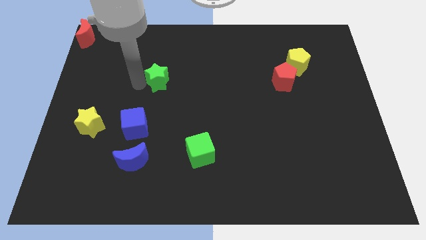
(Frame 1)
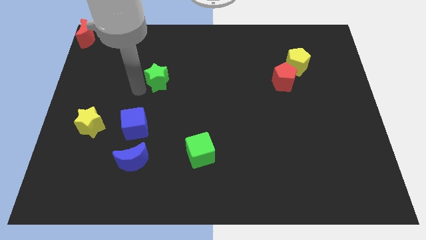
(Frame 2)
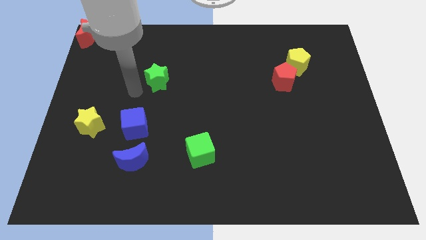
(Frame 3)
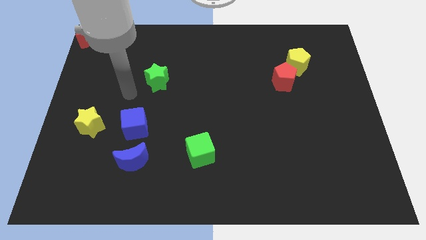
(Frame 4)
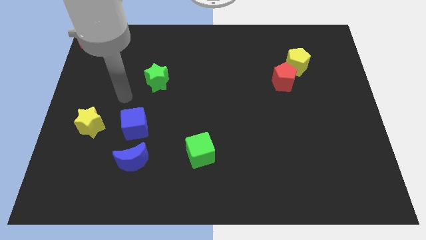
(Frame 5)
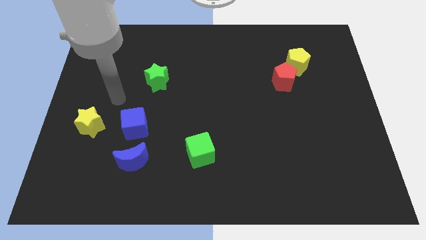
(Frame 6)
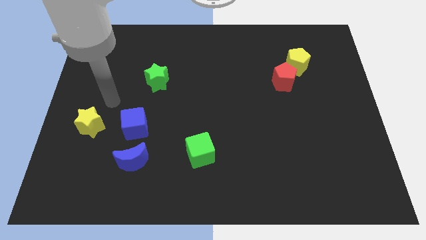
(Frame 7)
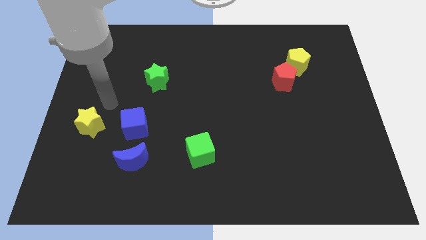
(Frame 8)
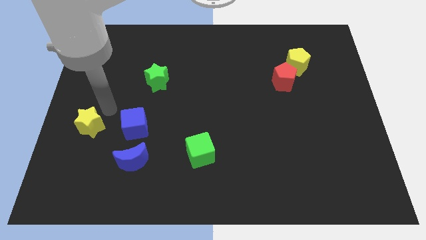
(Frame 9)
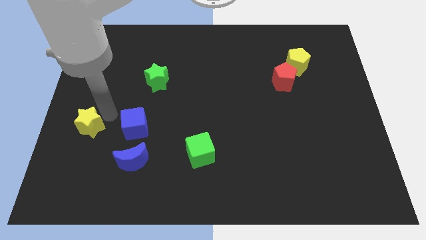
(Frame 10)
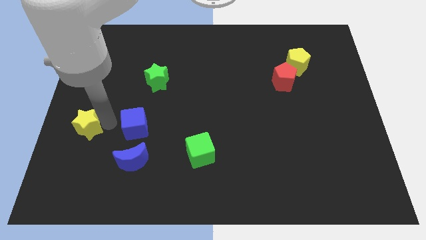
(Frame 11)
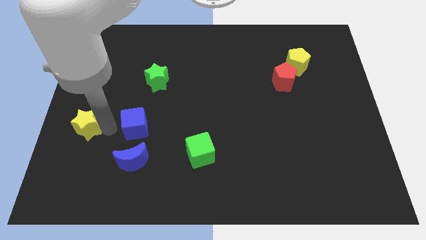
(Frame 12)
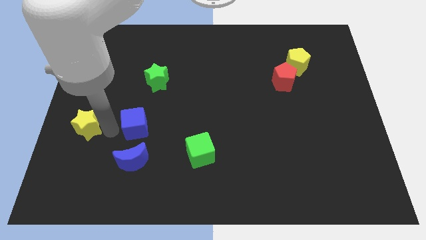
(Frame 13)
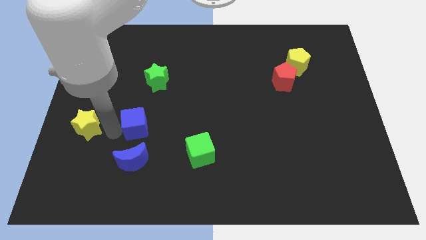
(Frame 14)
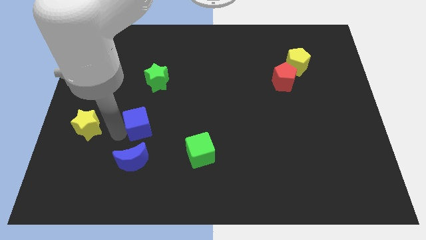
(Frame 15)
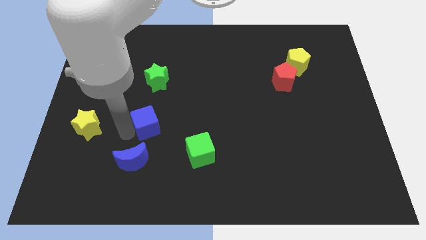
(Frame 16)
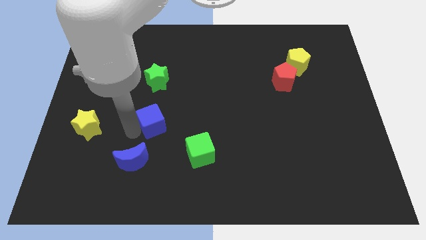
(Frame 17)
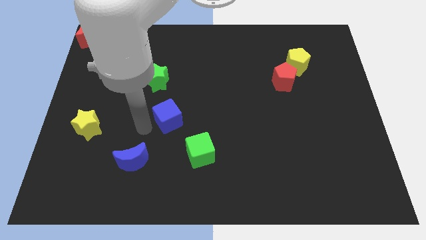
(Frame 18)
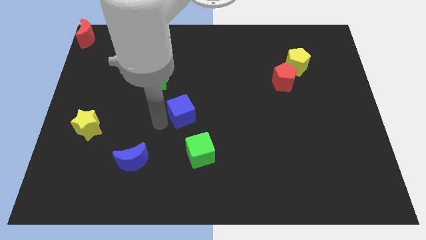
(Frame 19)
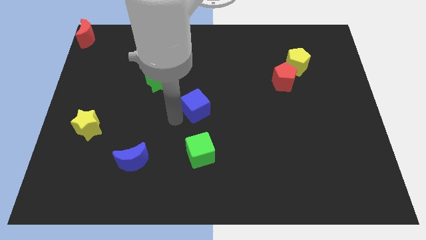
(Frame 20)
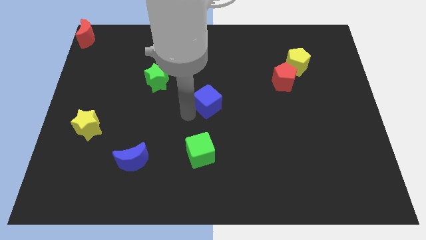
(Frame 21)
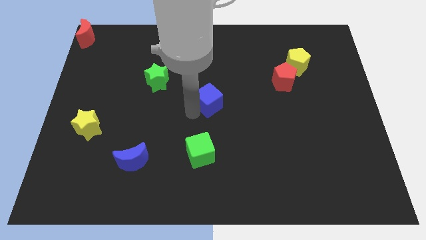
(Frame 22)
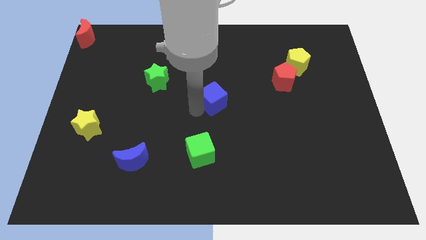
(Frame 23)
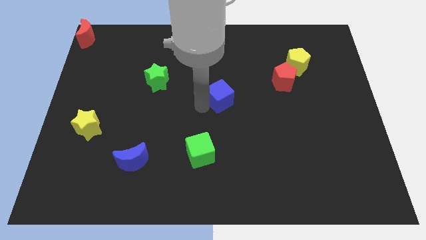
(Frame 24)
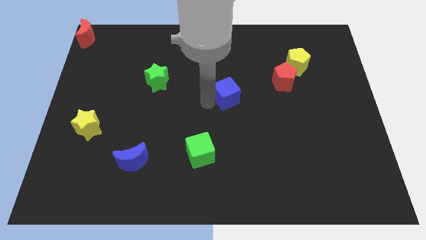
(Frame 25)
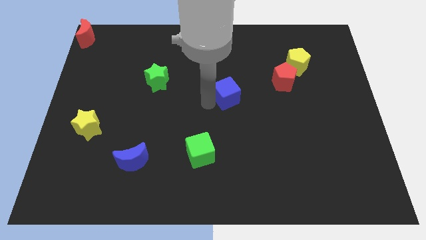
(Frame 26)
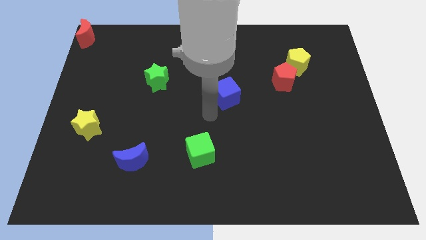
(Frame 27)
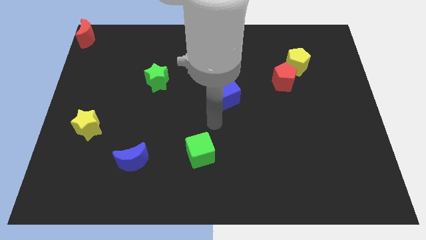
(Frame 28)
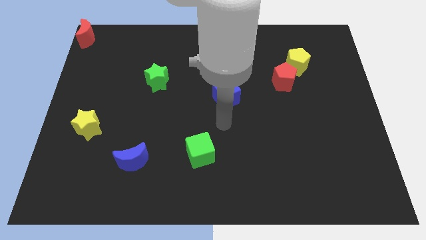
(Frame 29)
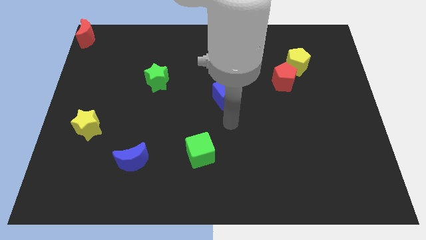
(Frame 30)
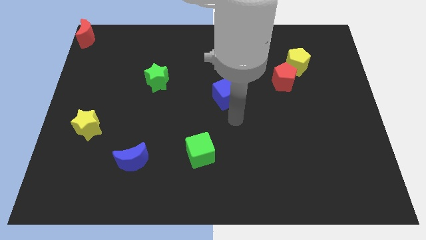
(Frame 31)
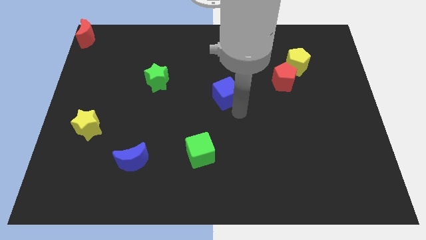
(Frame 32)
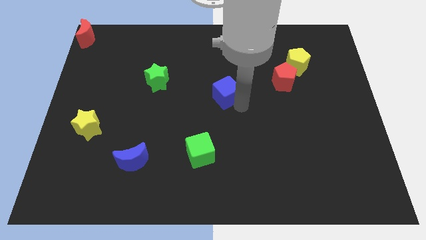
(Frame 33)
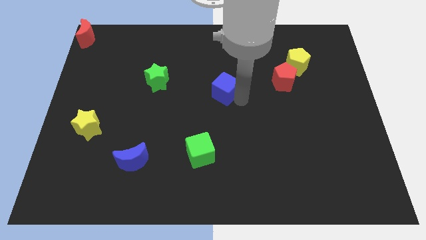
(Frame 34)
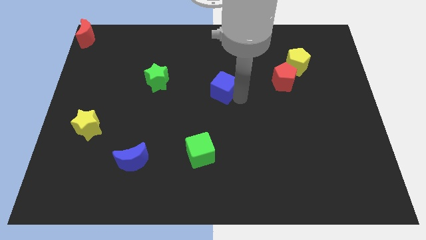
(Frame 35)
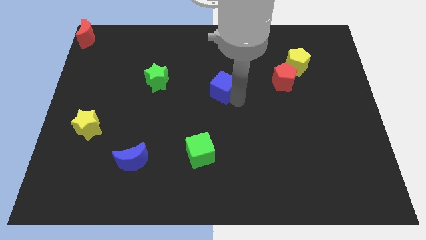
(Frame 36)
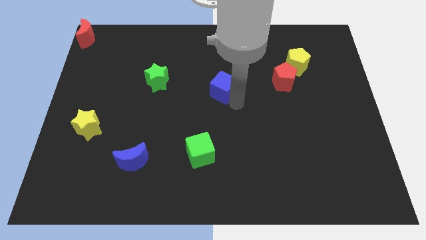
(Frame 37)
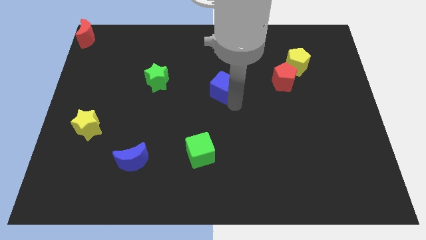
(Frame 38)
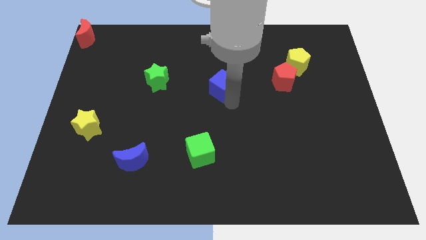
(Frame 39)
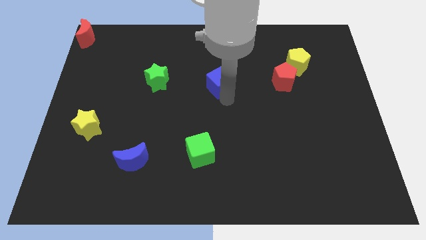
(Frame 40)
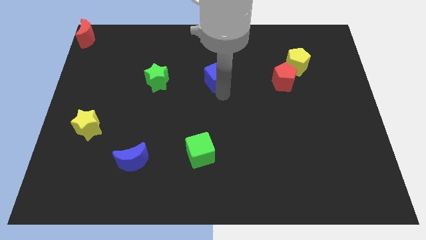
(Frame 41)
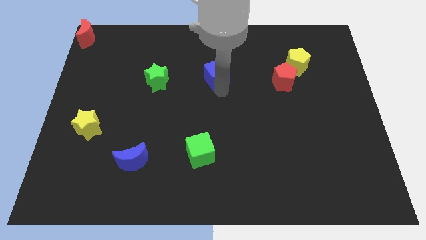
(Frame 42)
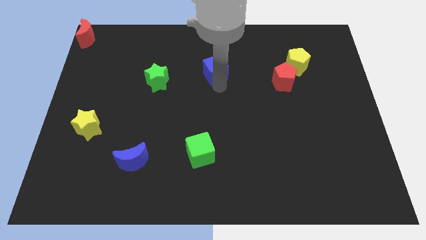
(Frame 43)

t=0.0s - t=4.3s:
move the blue cube towards top side

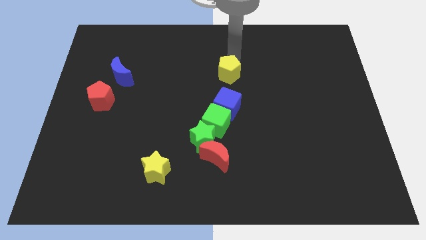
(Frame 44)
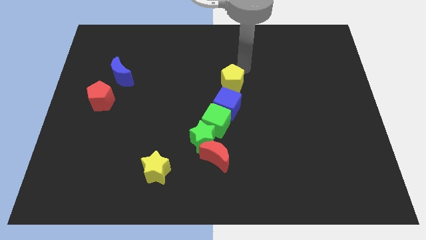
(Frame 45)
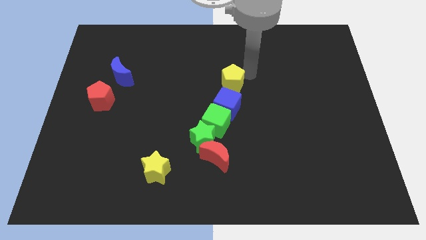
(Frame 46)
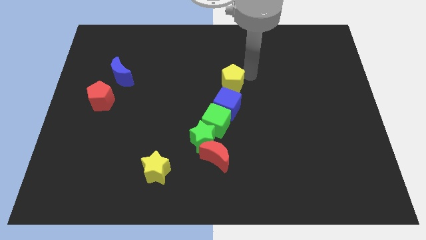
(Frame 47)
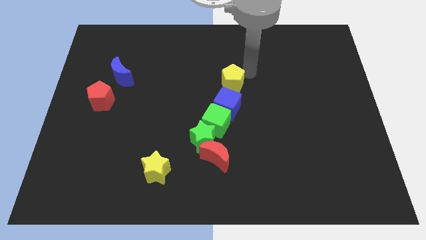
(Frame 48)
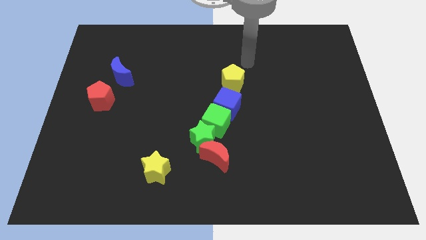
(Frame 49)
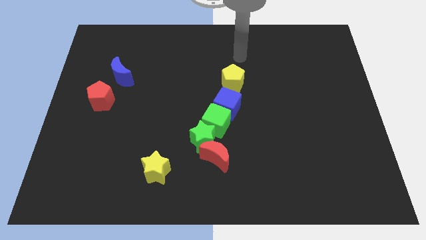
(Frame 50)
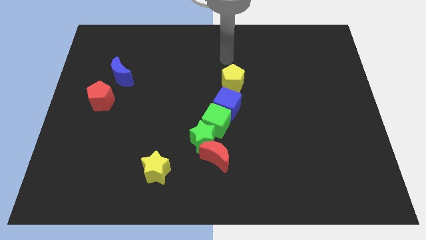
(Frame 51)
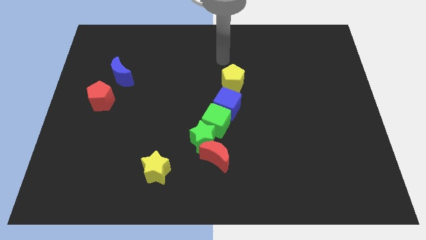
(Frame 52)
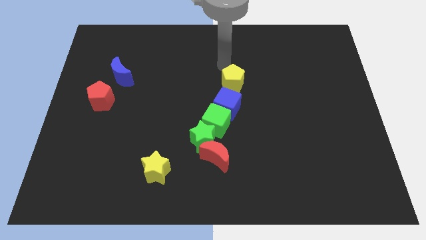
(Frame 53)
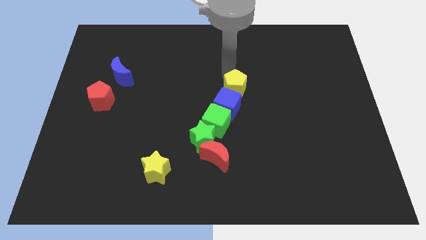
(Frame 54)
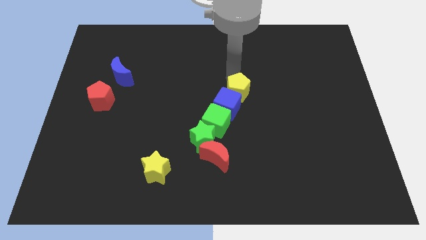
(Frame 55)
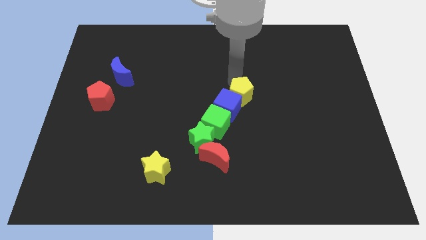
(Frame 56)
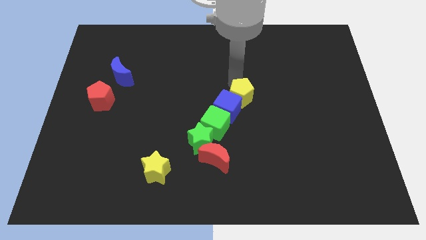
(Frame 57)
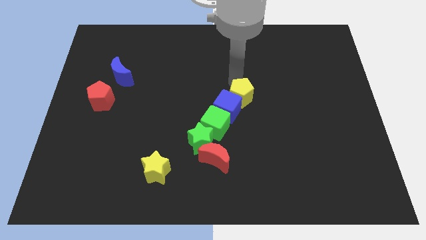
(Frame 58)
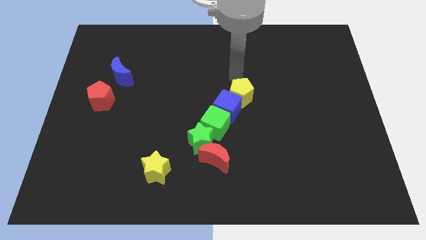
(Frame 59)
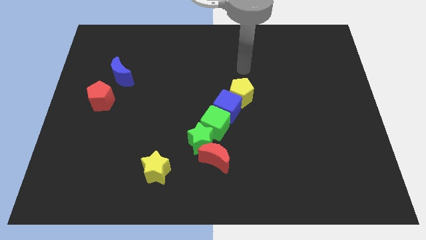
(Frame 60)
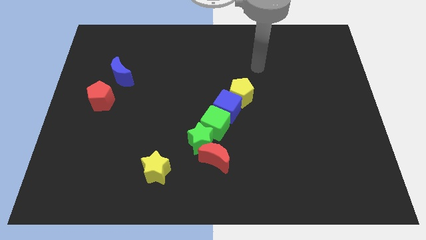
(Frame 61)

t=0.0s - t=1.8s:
slightly push yellow pentagon to the blue cube

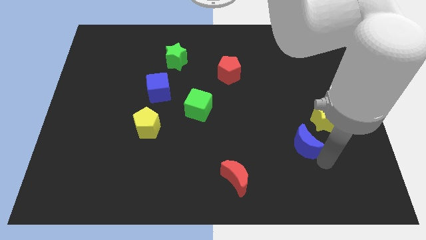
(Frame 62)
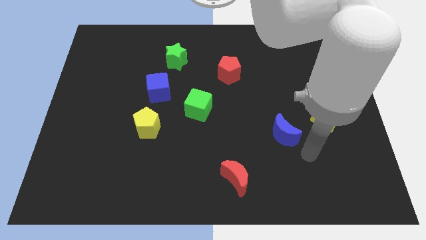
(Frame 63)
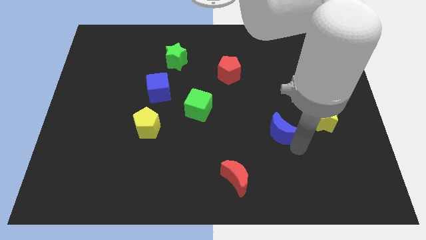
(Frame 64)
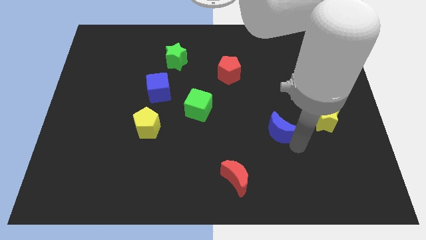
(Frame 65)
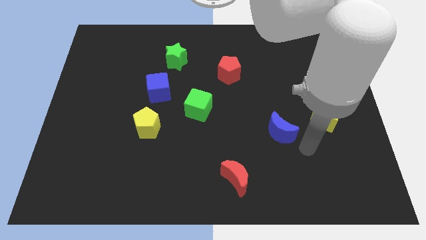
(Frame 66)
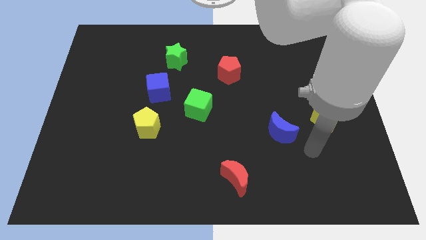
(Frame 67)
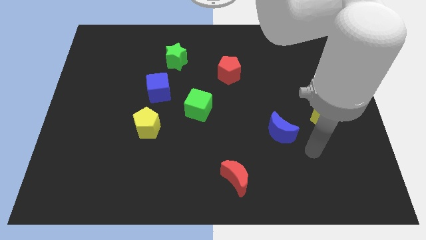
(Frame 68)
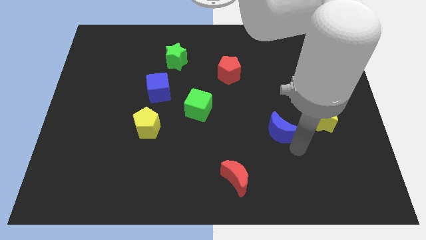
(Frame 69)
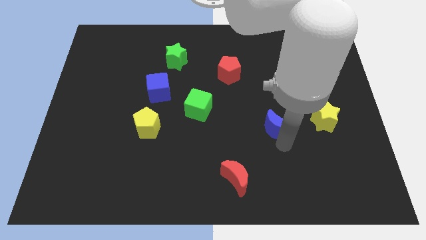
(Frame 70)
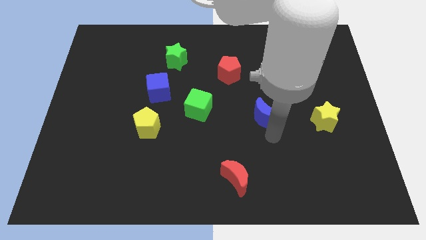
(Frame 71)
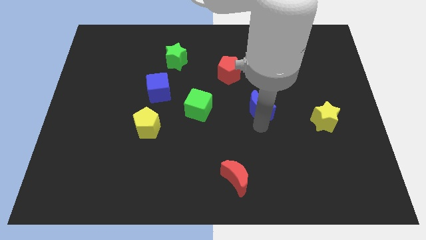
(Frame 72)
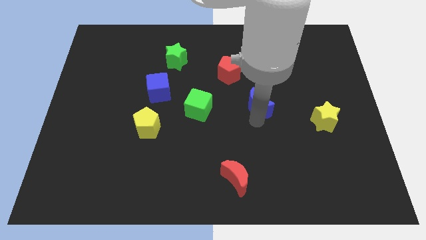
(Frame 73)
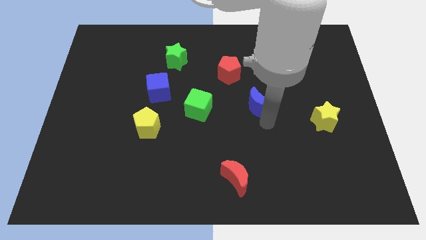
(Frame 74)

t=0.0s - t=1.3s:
push blue crescent to the right of the green cube

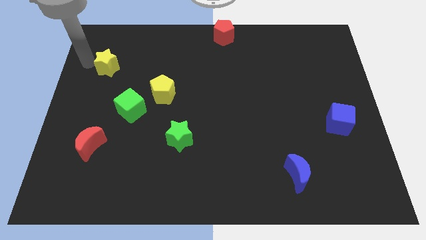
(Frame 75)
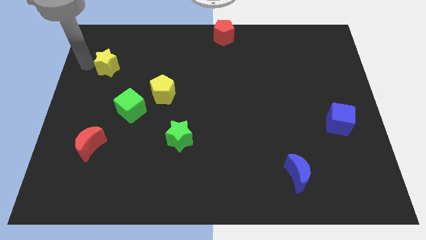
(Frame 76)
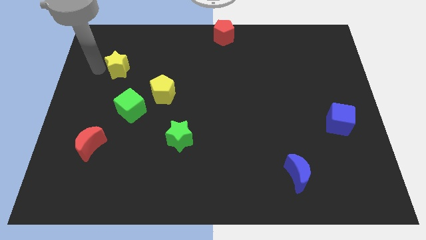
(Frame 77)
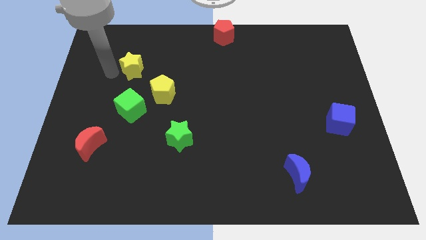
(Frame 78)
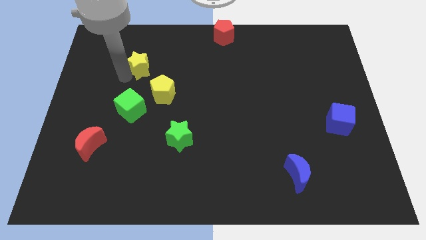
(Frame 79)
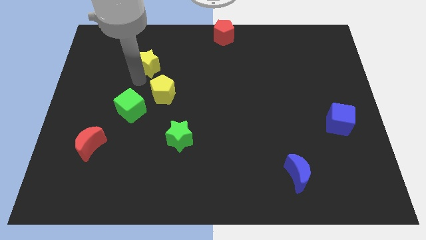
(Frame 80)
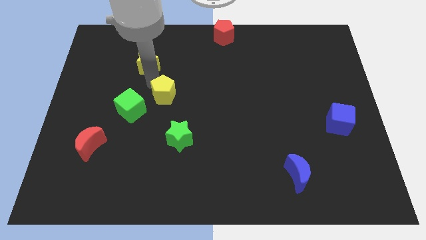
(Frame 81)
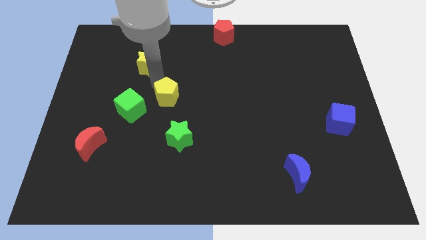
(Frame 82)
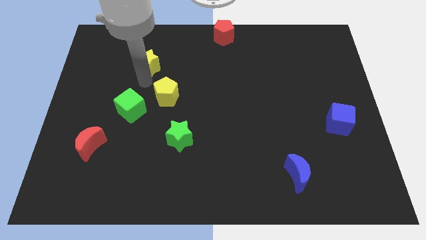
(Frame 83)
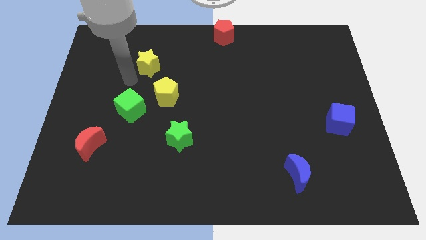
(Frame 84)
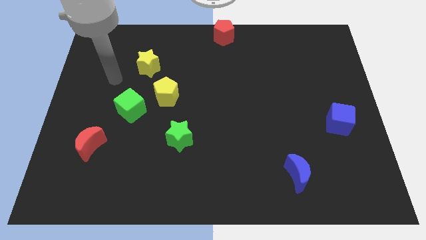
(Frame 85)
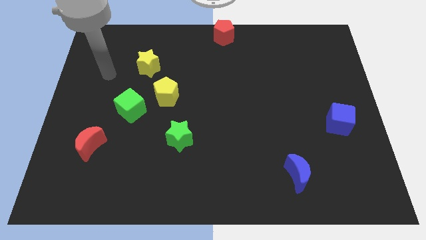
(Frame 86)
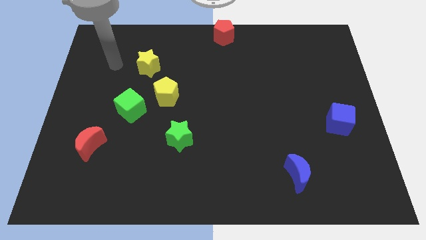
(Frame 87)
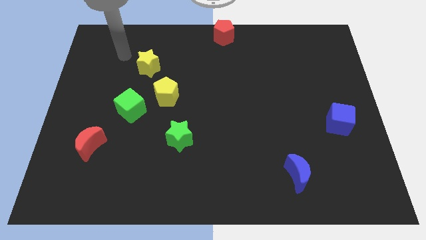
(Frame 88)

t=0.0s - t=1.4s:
push the yellow star to the top left of the yellow pentagon
